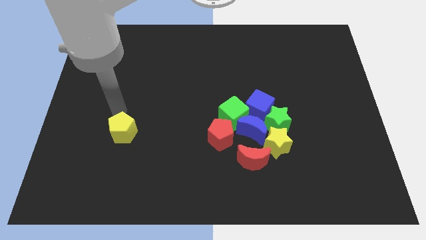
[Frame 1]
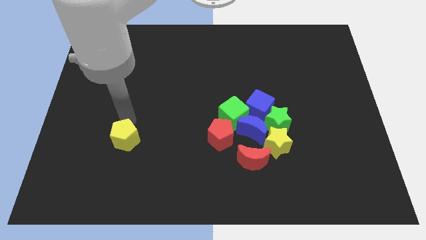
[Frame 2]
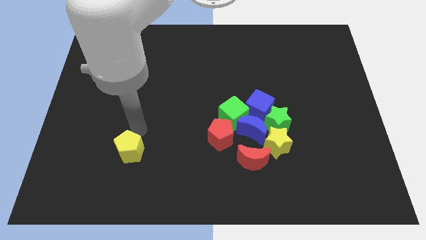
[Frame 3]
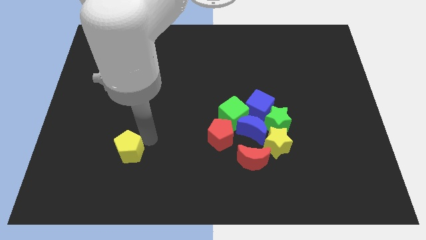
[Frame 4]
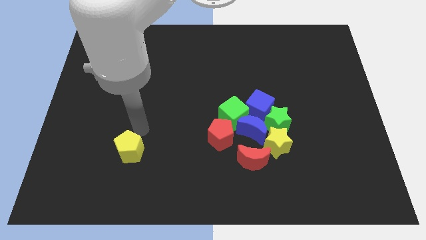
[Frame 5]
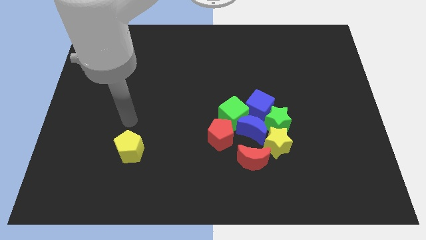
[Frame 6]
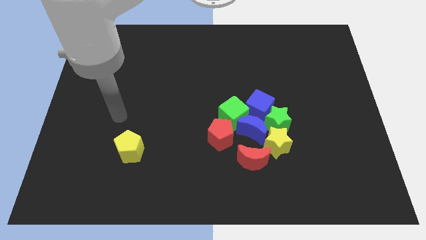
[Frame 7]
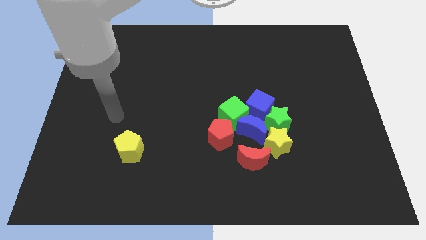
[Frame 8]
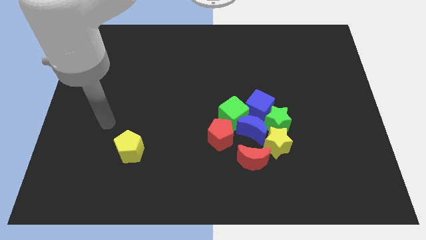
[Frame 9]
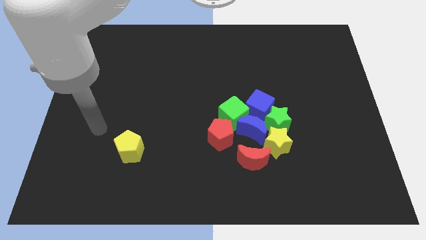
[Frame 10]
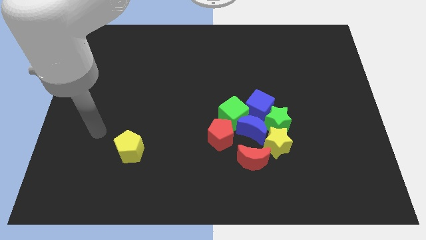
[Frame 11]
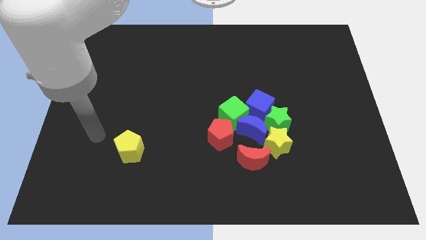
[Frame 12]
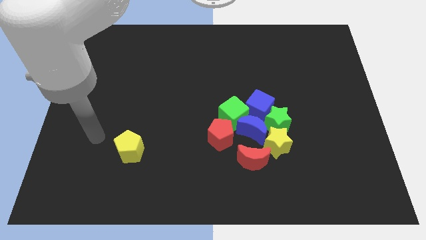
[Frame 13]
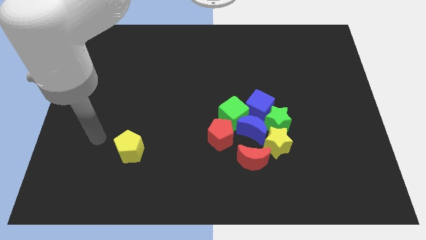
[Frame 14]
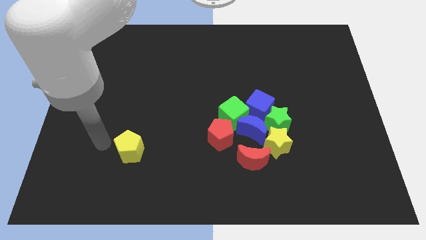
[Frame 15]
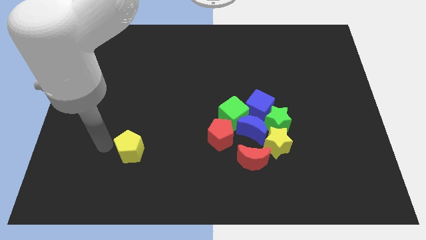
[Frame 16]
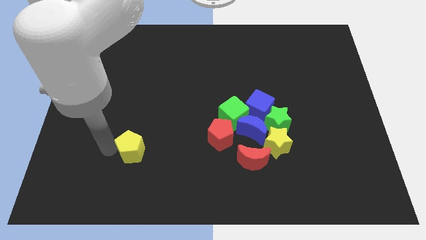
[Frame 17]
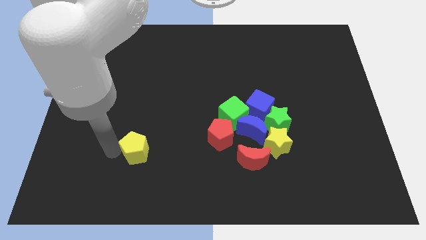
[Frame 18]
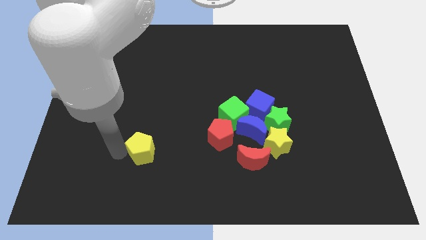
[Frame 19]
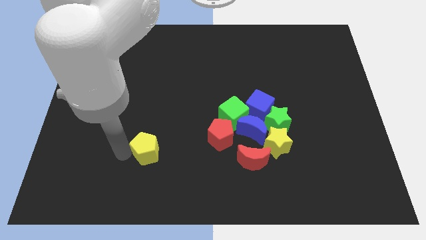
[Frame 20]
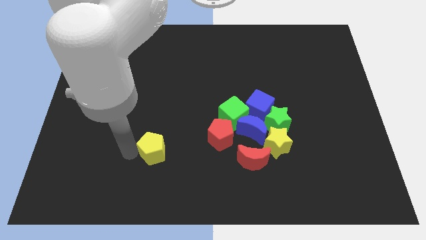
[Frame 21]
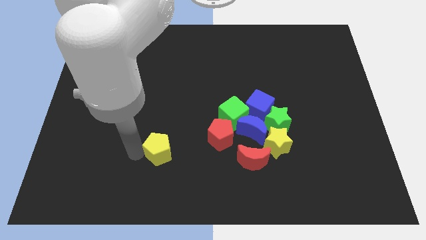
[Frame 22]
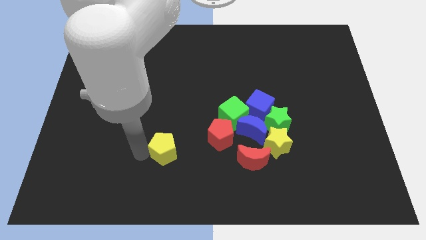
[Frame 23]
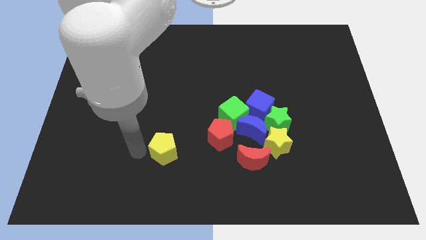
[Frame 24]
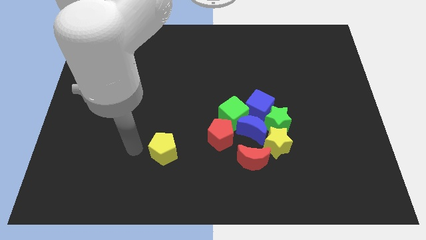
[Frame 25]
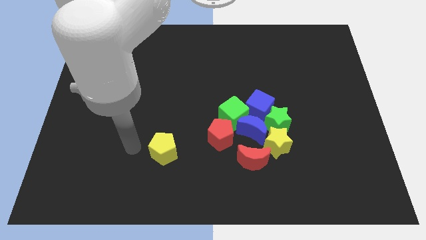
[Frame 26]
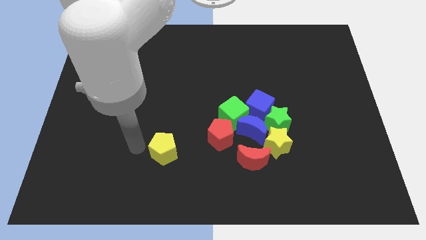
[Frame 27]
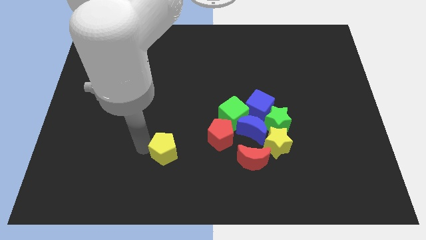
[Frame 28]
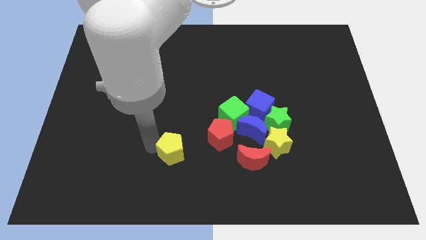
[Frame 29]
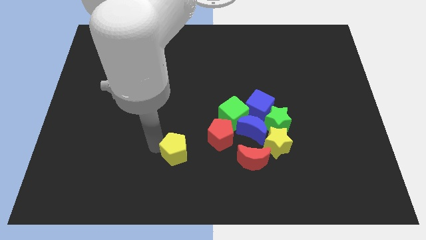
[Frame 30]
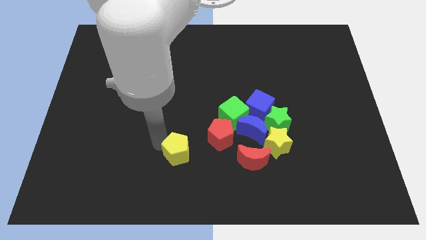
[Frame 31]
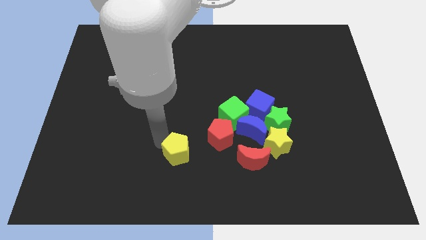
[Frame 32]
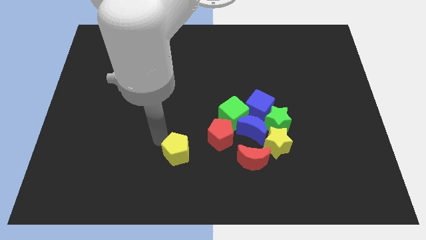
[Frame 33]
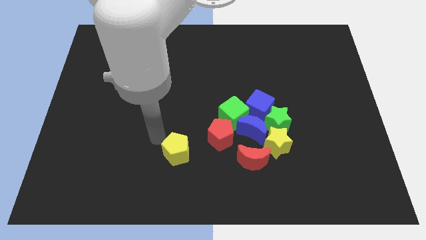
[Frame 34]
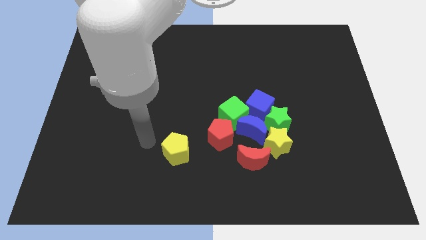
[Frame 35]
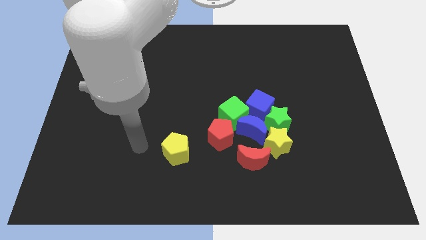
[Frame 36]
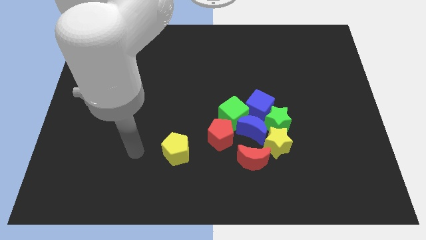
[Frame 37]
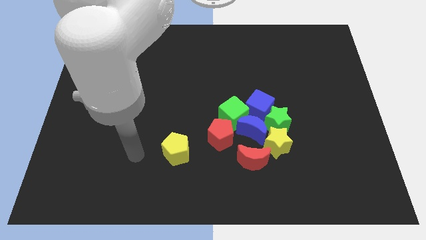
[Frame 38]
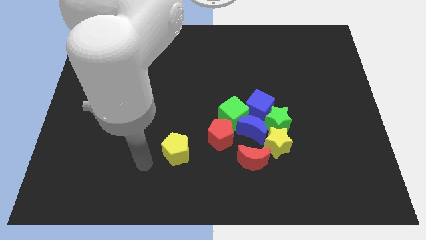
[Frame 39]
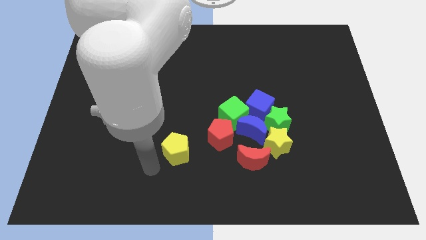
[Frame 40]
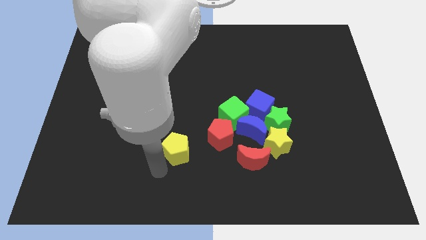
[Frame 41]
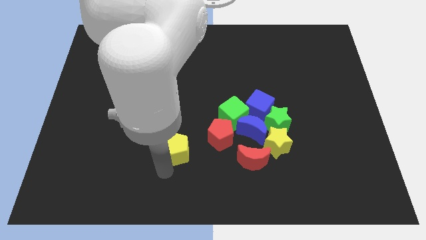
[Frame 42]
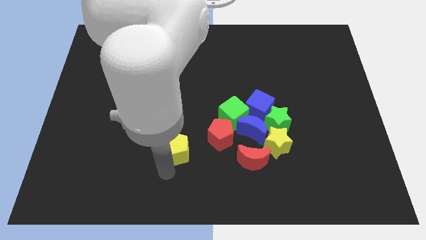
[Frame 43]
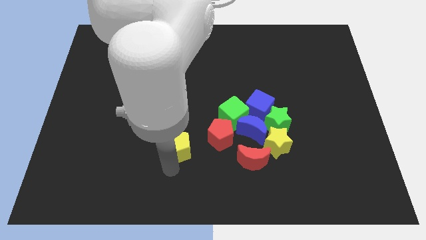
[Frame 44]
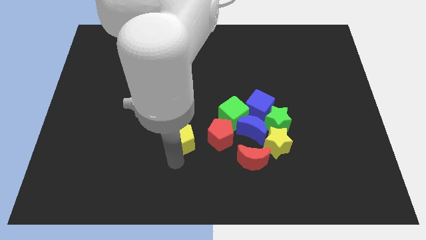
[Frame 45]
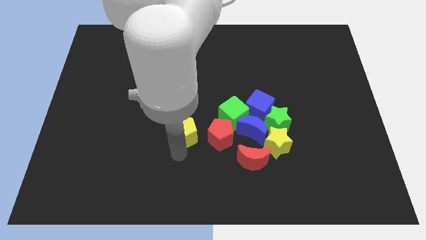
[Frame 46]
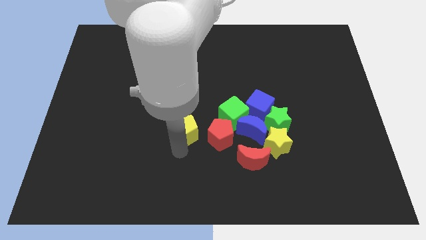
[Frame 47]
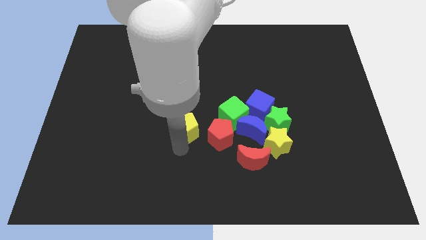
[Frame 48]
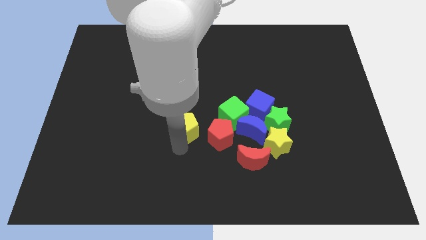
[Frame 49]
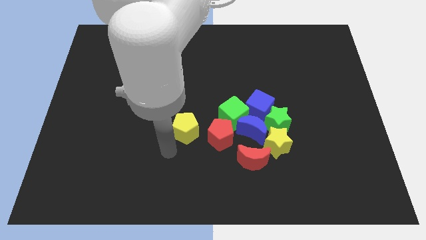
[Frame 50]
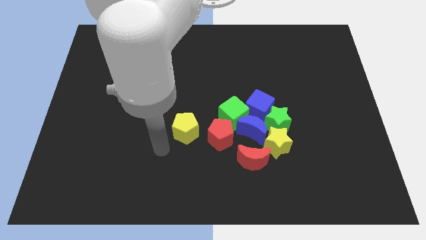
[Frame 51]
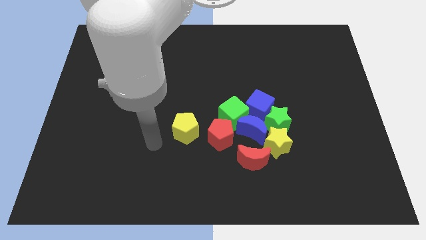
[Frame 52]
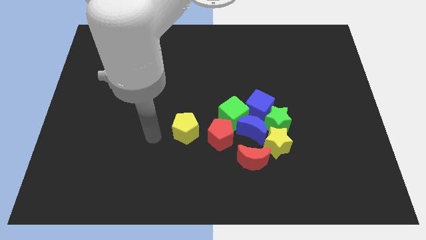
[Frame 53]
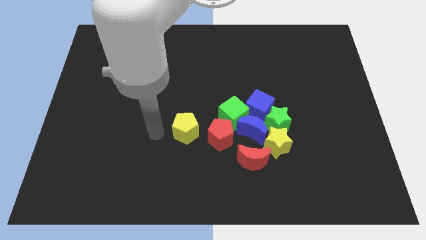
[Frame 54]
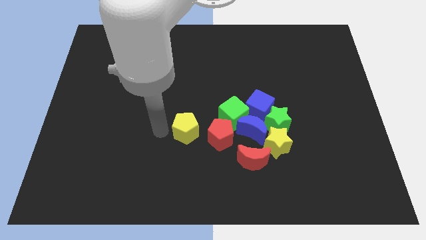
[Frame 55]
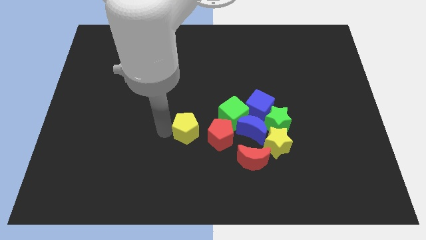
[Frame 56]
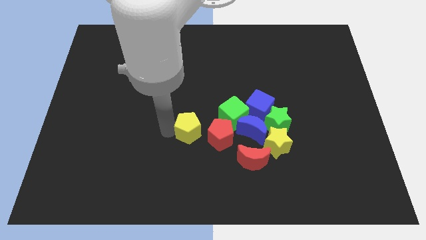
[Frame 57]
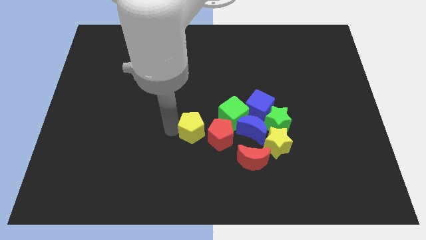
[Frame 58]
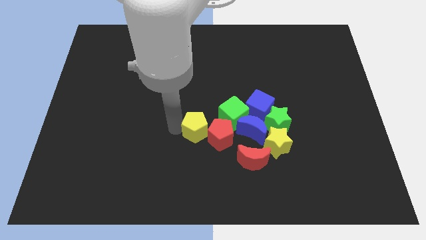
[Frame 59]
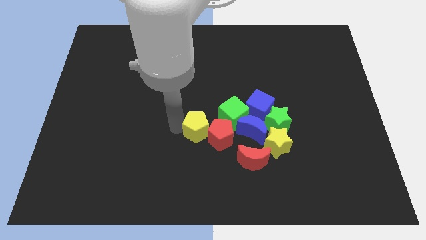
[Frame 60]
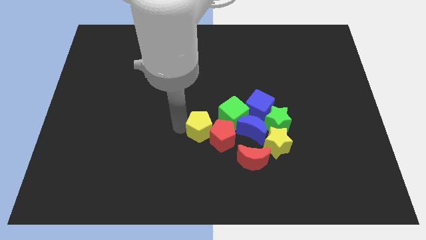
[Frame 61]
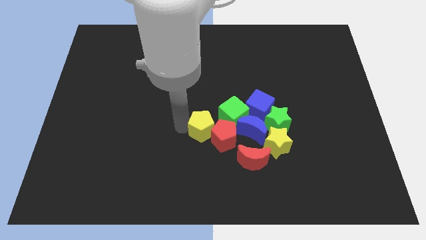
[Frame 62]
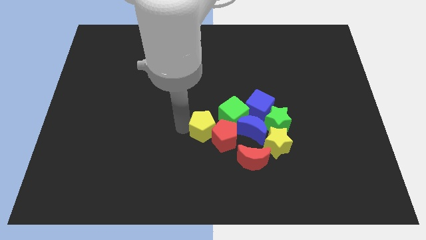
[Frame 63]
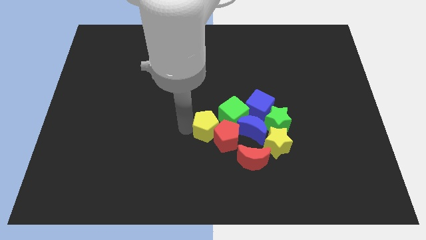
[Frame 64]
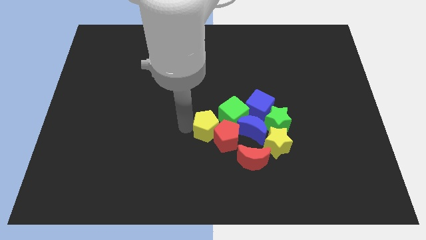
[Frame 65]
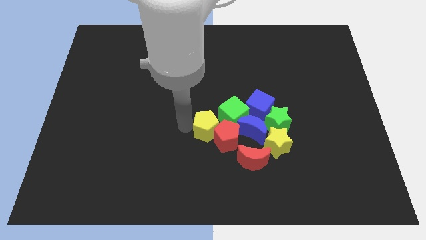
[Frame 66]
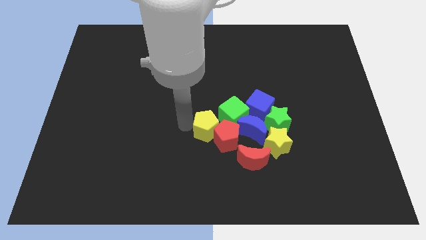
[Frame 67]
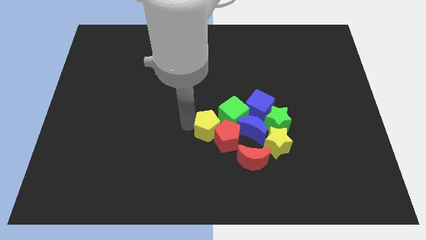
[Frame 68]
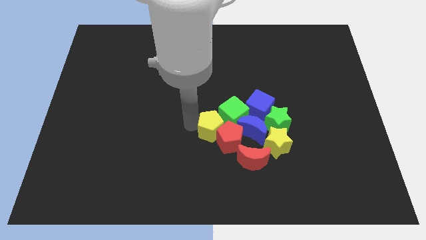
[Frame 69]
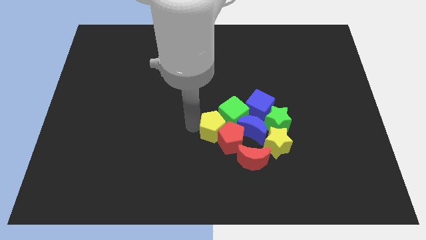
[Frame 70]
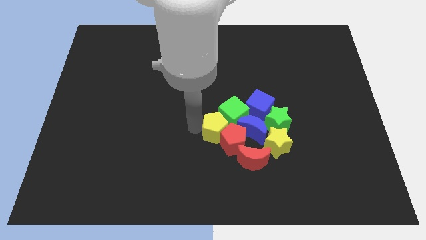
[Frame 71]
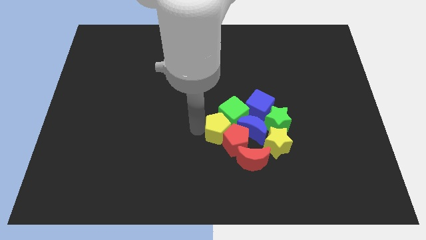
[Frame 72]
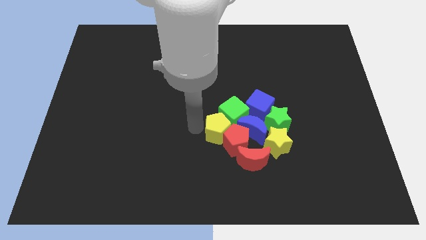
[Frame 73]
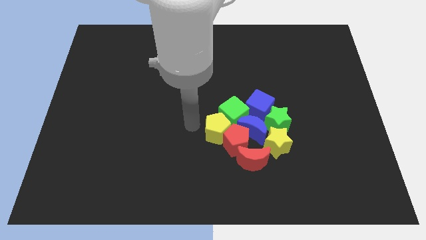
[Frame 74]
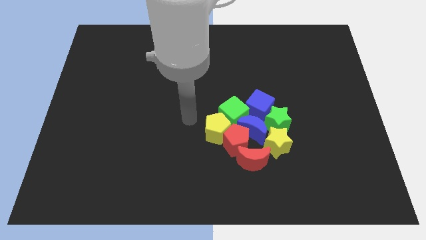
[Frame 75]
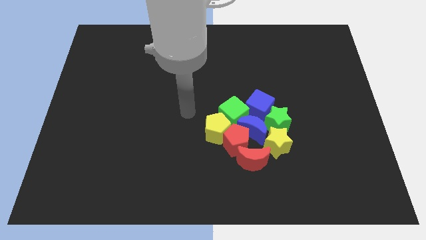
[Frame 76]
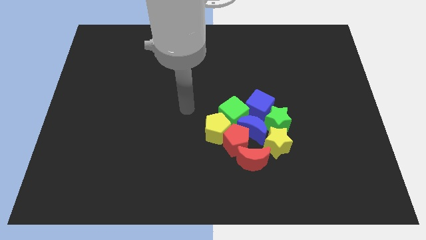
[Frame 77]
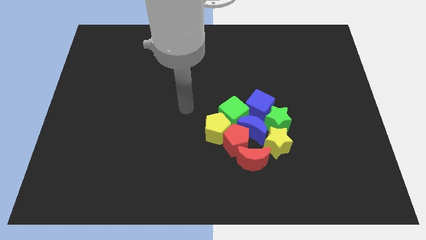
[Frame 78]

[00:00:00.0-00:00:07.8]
move the yellow pentagon left beside the green cube

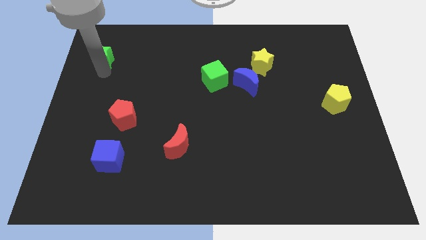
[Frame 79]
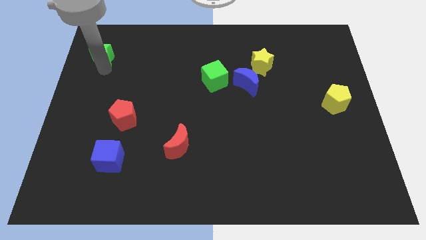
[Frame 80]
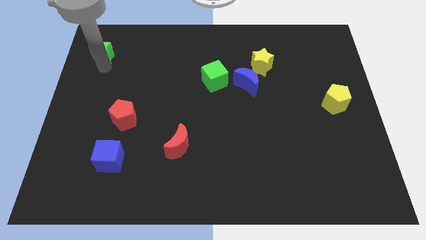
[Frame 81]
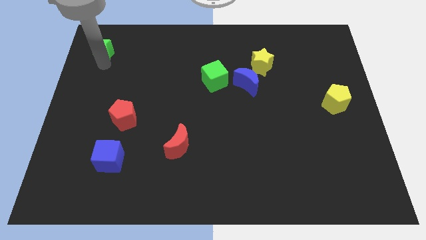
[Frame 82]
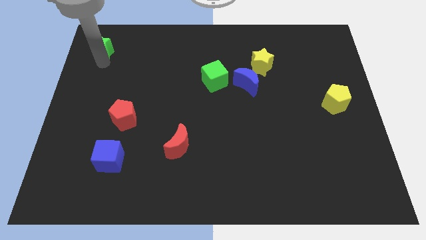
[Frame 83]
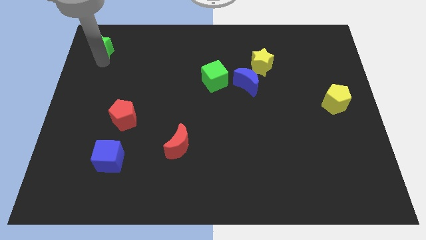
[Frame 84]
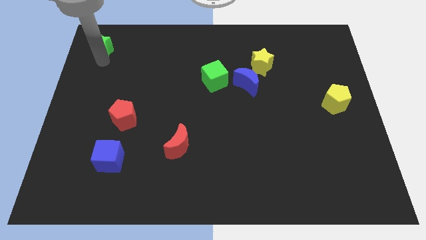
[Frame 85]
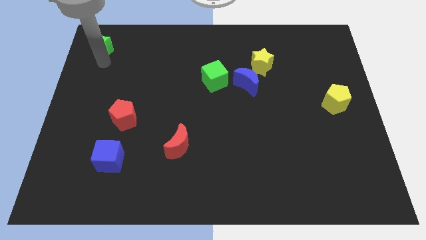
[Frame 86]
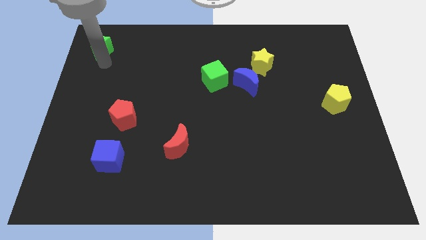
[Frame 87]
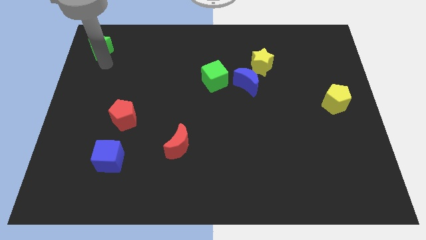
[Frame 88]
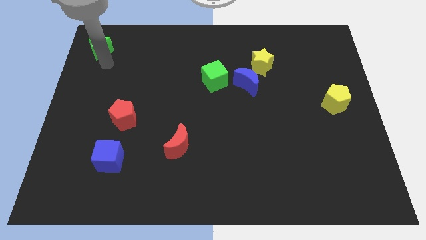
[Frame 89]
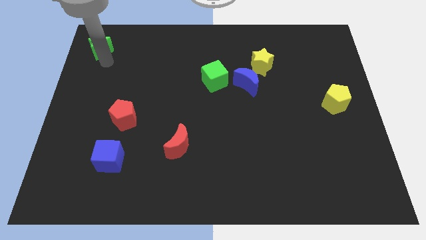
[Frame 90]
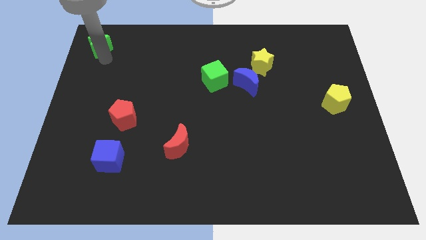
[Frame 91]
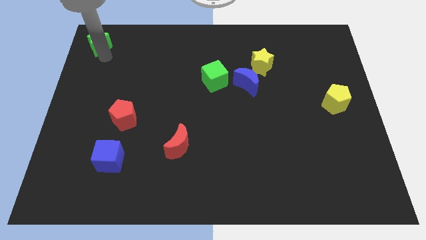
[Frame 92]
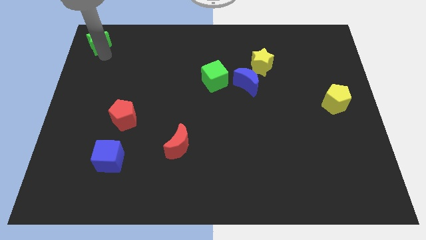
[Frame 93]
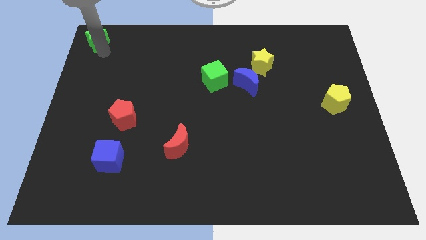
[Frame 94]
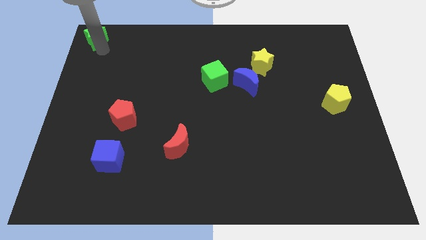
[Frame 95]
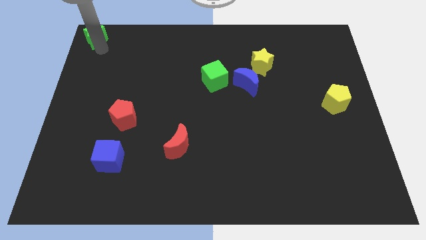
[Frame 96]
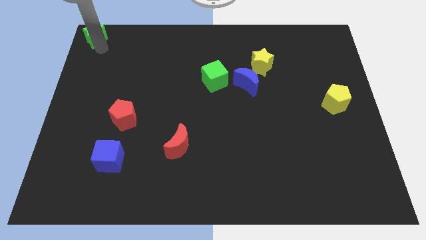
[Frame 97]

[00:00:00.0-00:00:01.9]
place a green star towards the top left corner of the board
